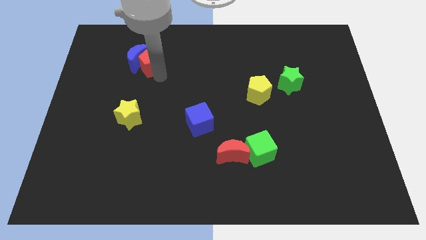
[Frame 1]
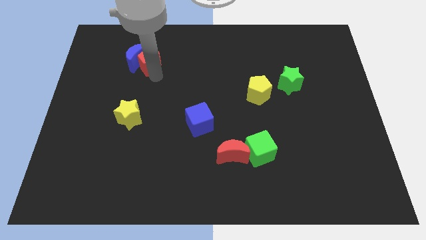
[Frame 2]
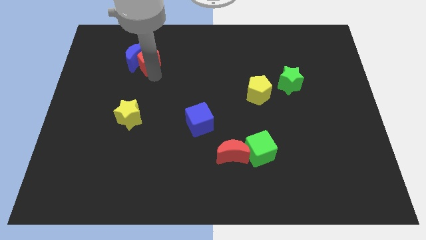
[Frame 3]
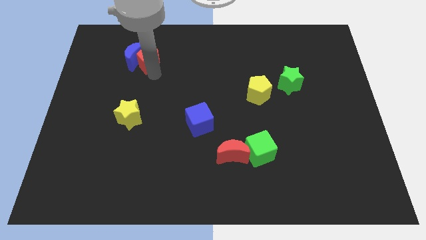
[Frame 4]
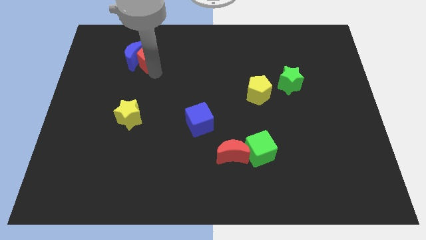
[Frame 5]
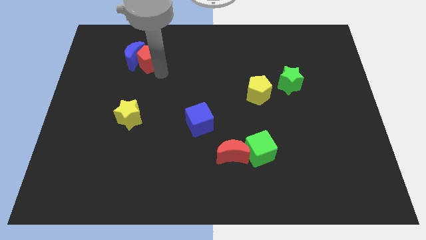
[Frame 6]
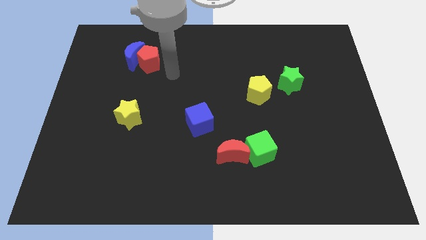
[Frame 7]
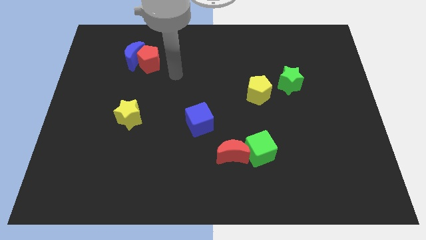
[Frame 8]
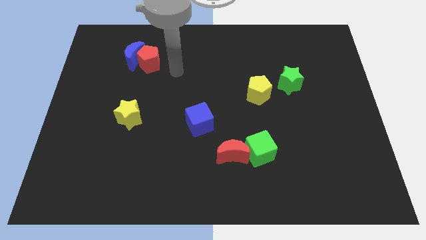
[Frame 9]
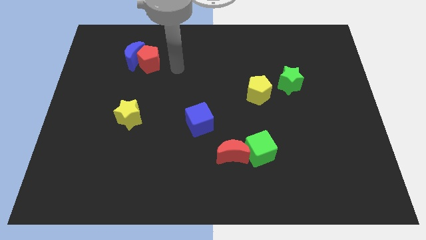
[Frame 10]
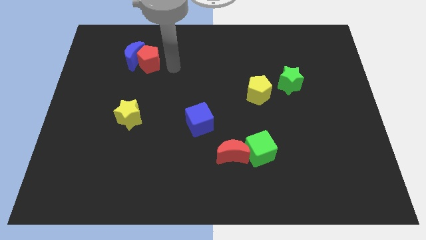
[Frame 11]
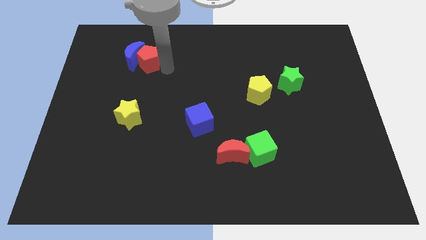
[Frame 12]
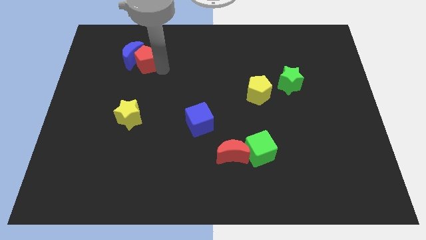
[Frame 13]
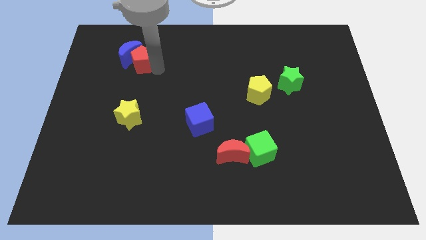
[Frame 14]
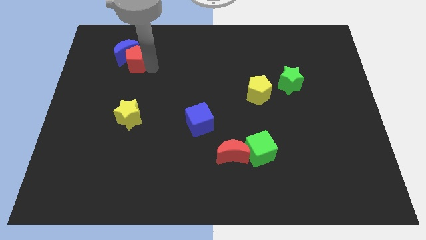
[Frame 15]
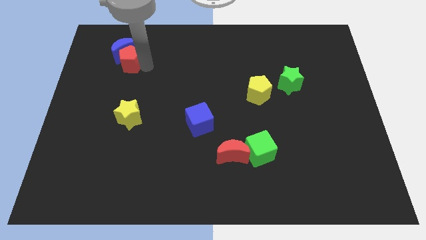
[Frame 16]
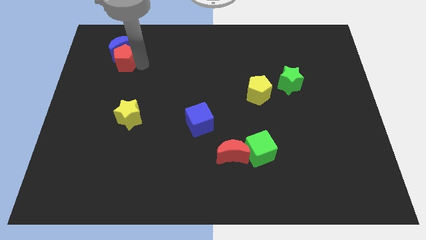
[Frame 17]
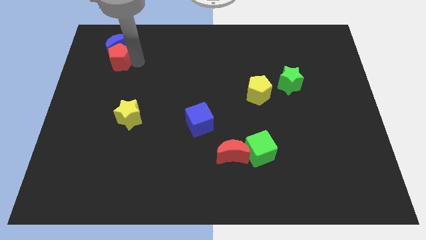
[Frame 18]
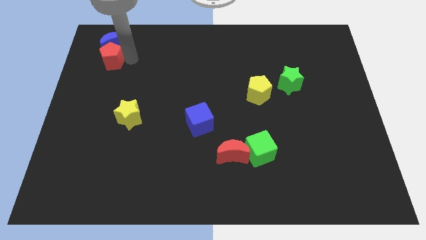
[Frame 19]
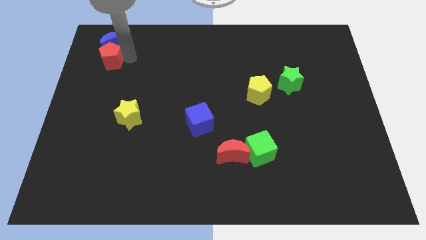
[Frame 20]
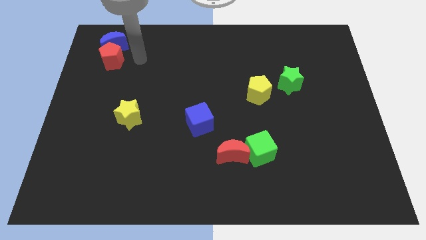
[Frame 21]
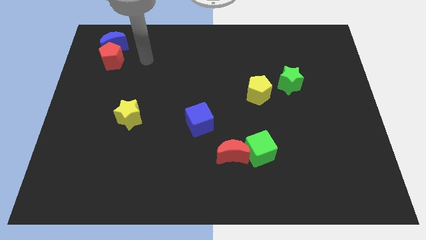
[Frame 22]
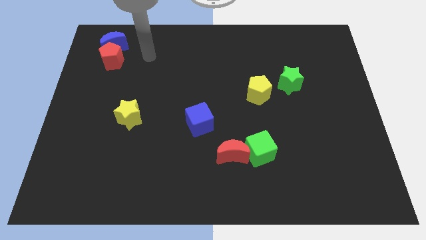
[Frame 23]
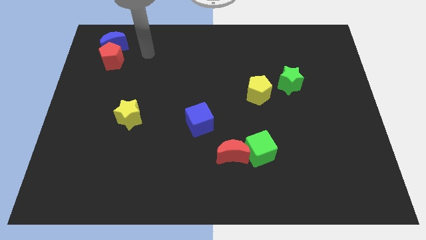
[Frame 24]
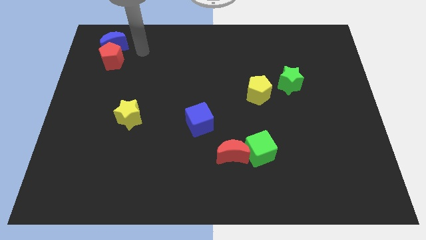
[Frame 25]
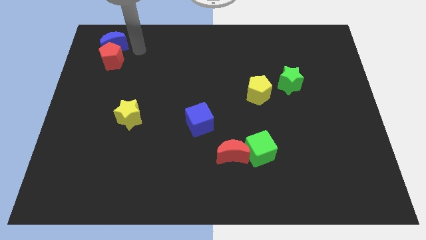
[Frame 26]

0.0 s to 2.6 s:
push red pentagon and blue crescent towards top corner of the board

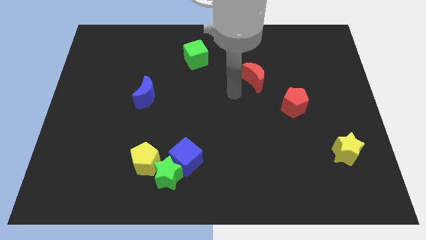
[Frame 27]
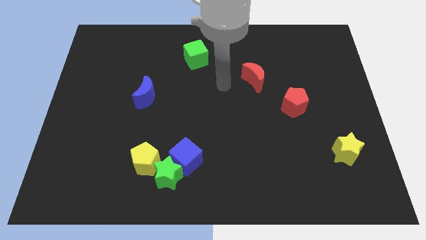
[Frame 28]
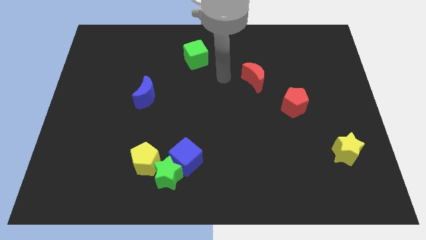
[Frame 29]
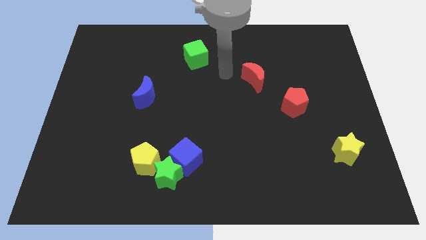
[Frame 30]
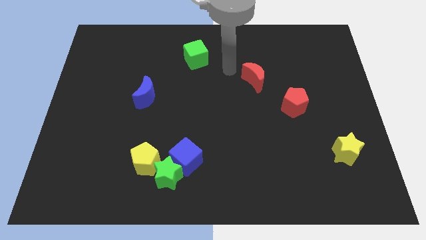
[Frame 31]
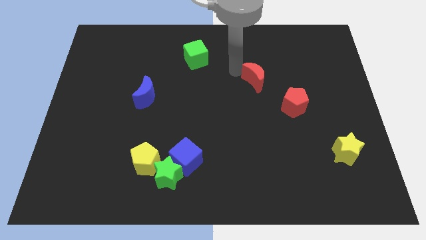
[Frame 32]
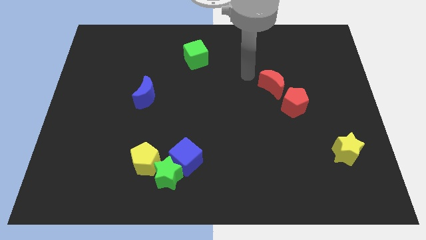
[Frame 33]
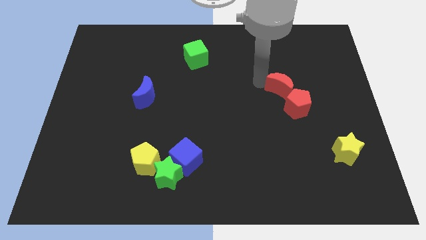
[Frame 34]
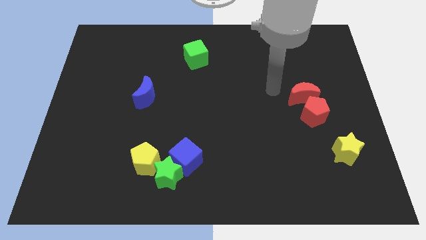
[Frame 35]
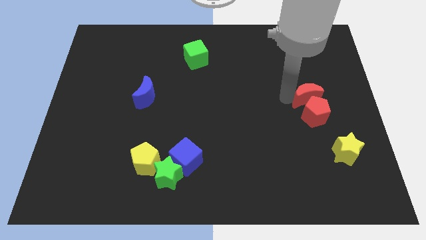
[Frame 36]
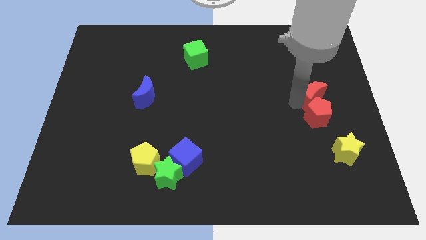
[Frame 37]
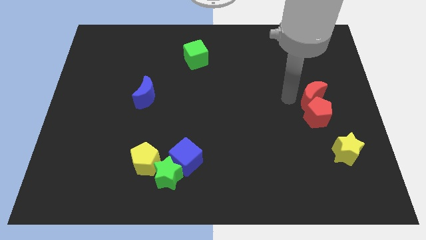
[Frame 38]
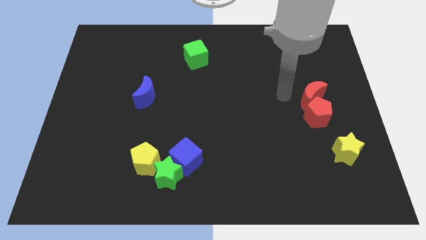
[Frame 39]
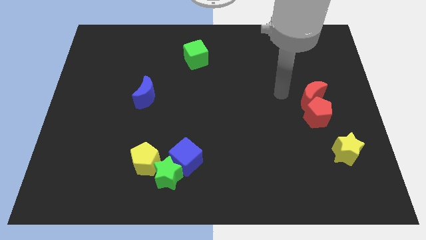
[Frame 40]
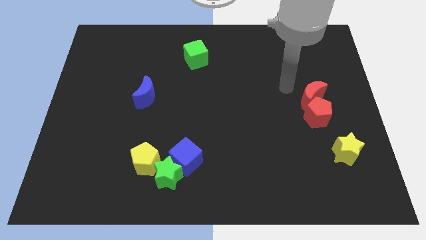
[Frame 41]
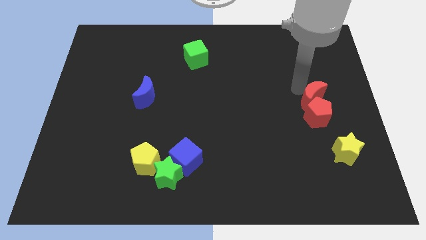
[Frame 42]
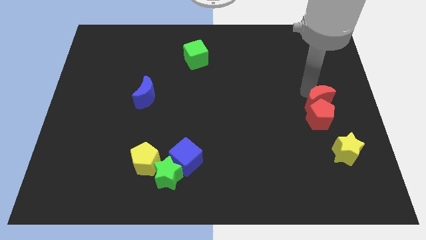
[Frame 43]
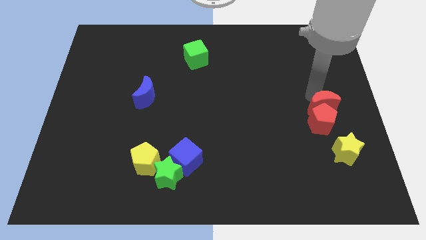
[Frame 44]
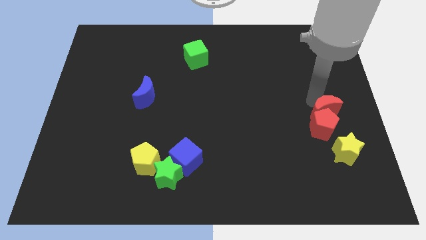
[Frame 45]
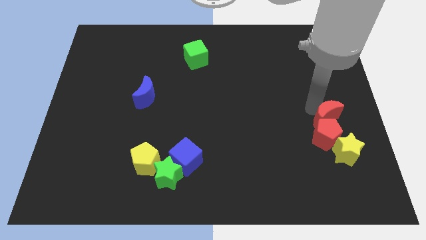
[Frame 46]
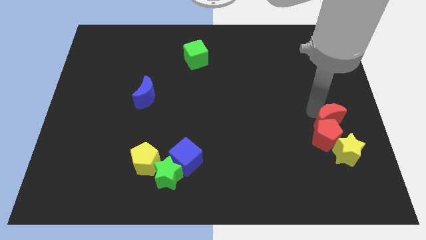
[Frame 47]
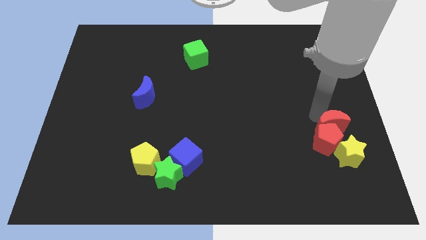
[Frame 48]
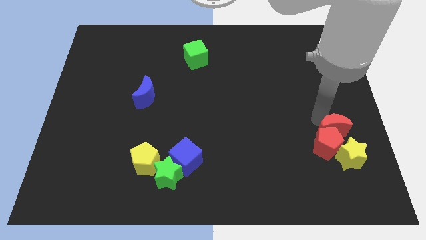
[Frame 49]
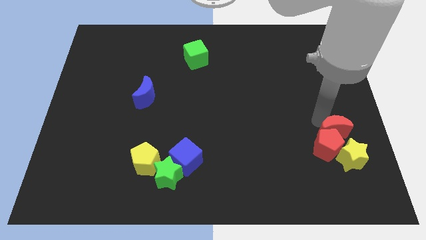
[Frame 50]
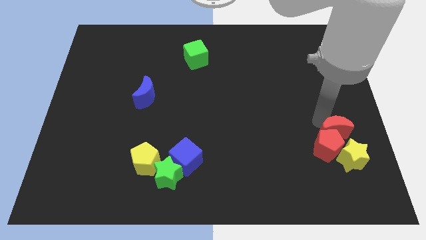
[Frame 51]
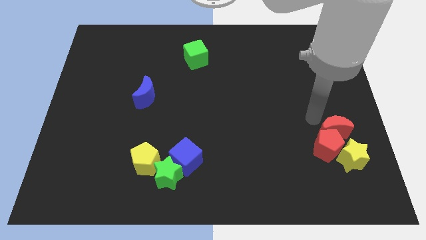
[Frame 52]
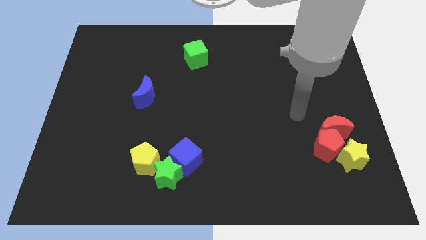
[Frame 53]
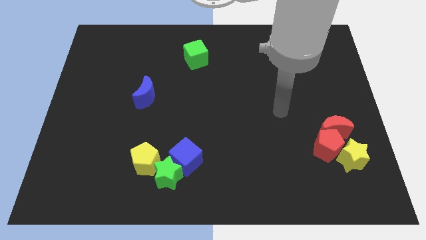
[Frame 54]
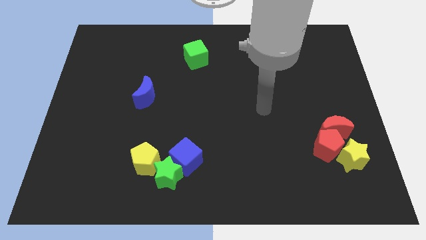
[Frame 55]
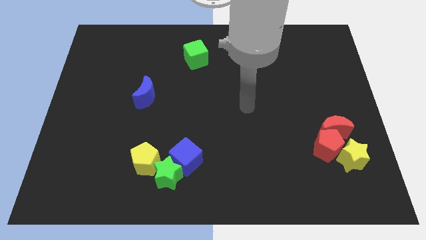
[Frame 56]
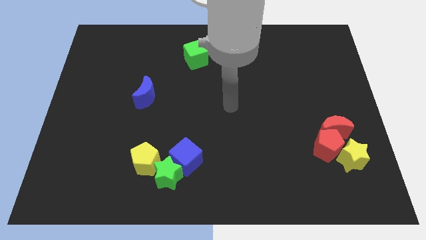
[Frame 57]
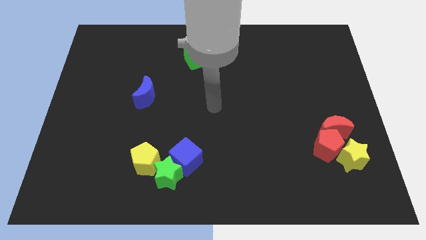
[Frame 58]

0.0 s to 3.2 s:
push the red crescent into the yellow star from the top along with the red pentagon

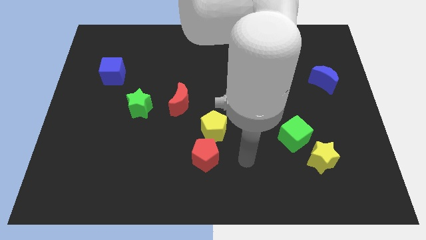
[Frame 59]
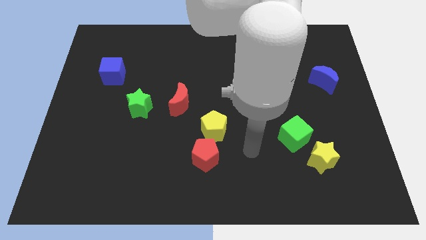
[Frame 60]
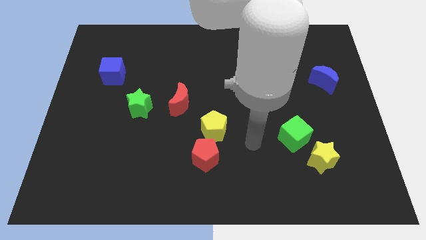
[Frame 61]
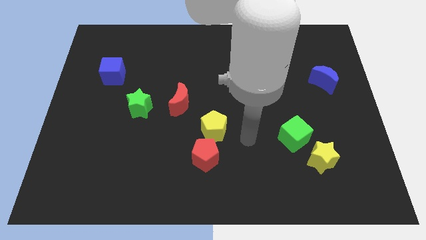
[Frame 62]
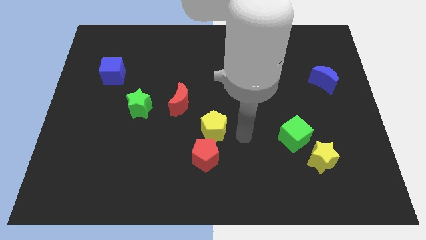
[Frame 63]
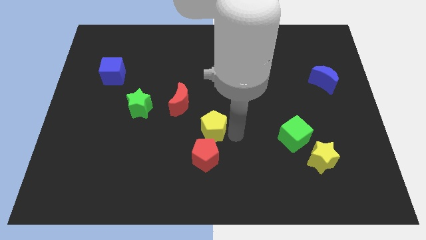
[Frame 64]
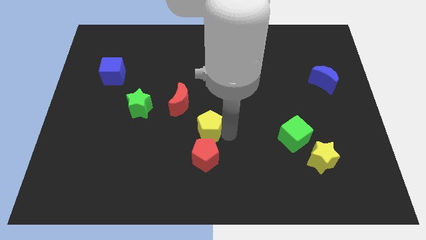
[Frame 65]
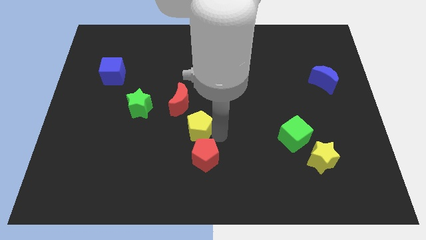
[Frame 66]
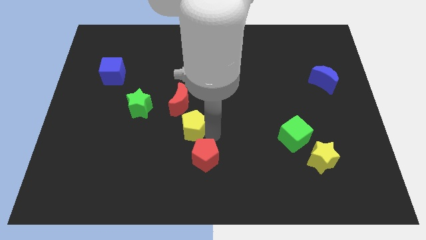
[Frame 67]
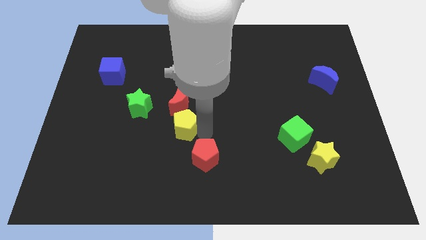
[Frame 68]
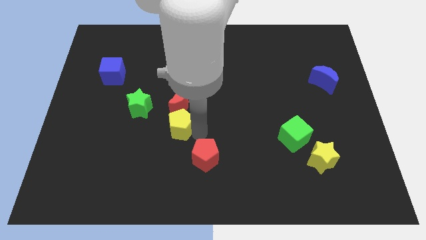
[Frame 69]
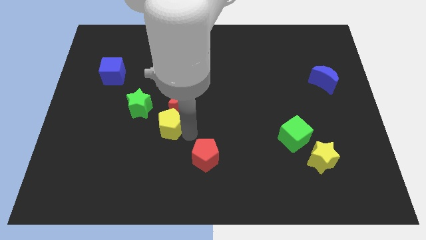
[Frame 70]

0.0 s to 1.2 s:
push the yellow pentagon to the bottom of the red crescent

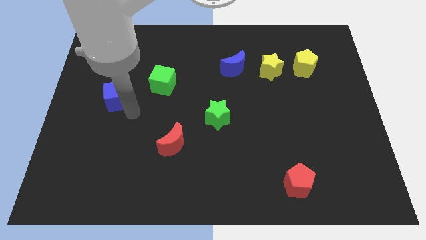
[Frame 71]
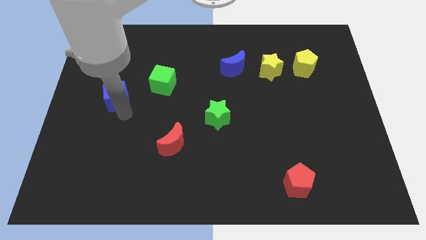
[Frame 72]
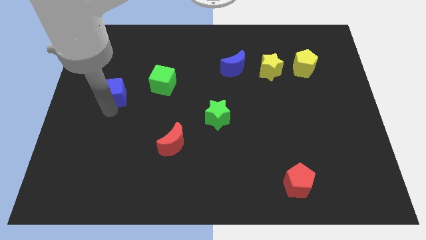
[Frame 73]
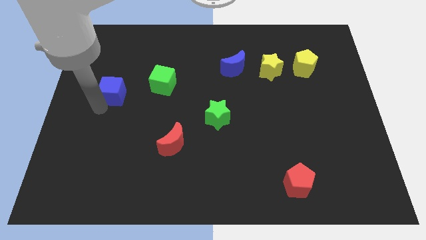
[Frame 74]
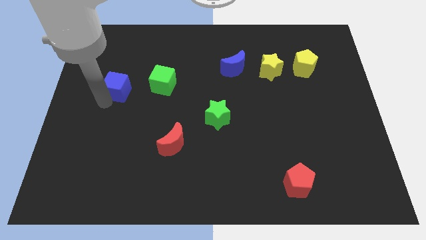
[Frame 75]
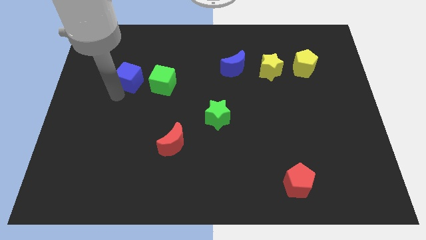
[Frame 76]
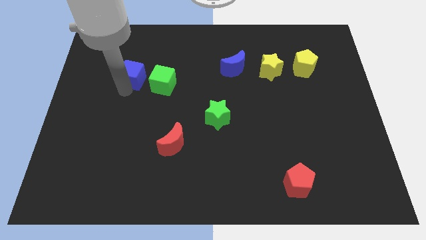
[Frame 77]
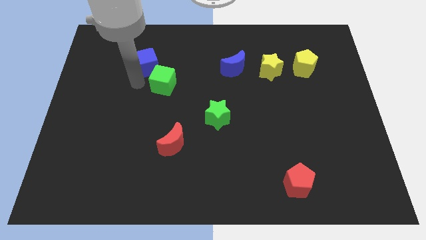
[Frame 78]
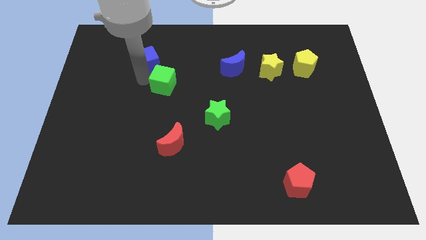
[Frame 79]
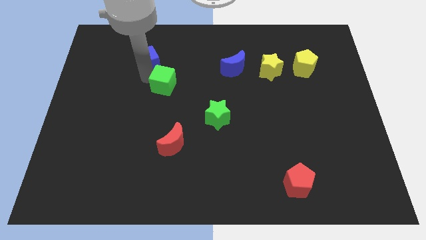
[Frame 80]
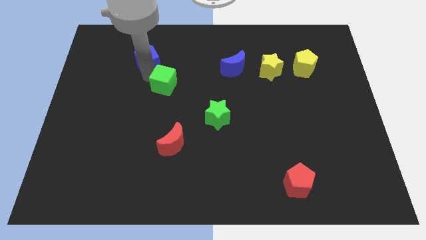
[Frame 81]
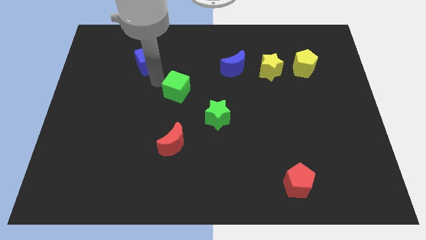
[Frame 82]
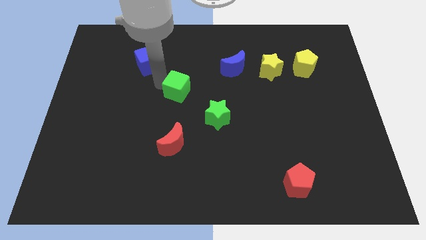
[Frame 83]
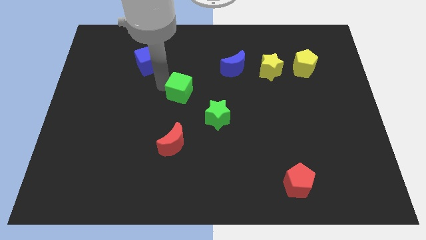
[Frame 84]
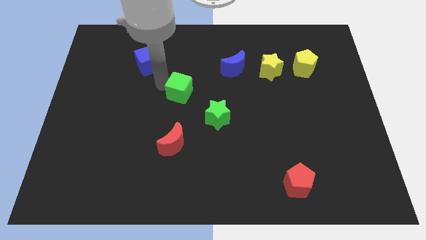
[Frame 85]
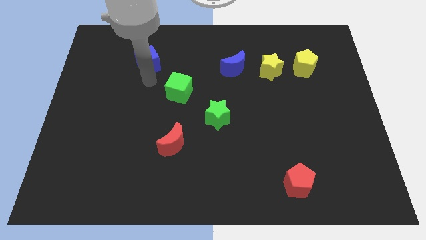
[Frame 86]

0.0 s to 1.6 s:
drag the blue cube diagonally top left of the green cube

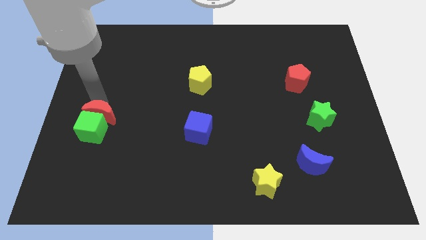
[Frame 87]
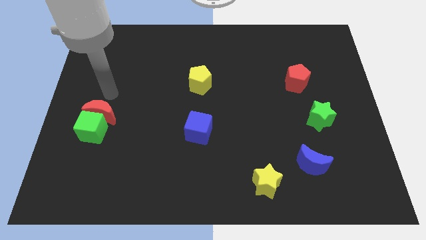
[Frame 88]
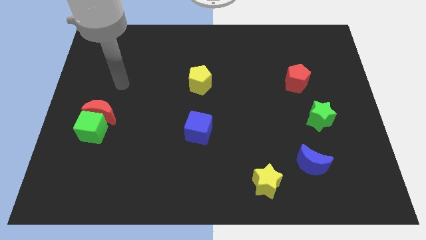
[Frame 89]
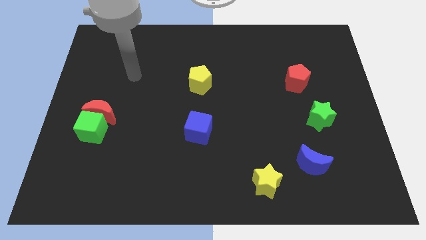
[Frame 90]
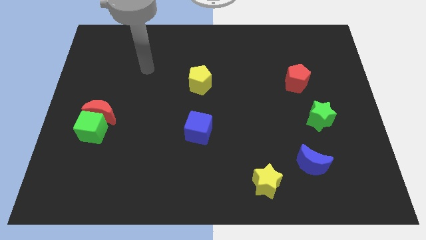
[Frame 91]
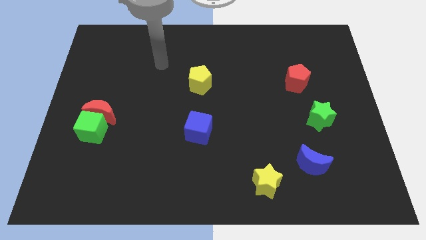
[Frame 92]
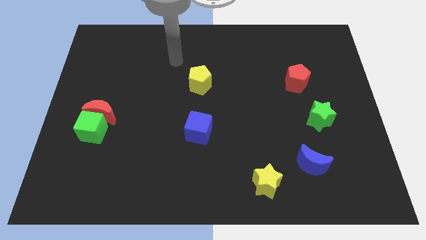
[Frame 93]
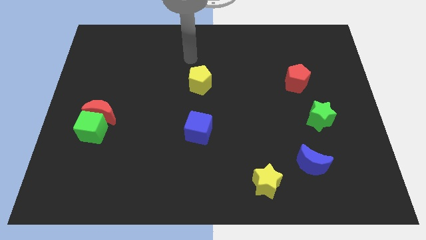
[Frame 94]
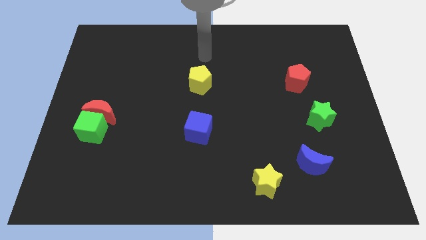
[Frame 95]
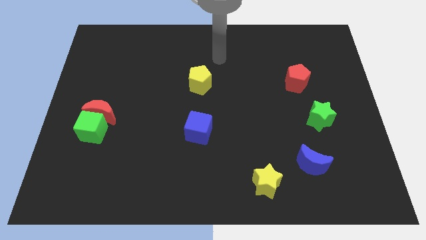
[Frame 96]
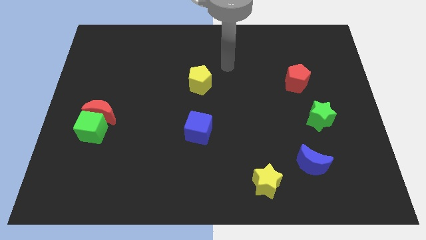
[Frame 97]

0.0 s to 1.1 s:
move your hand away from the group of blocks
